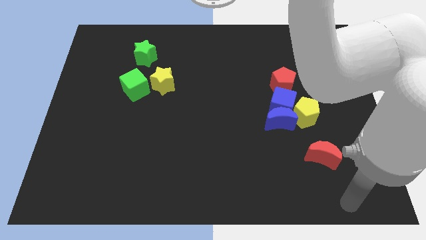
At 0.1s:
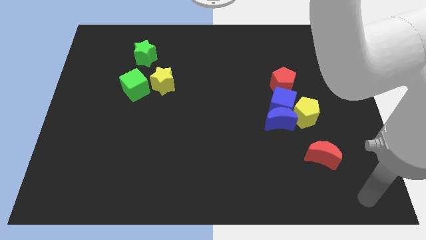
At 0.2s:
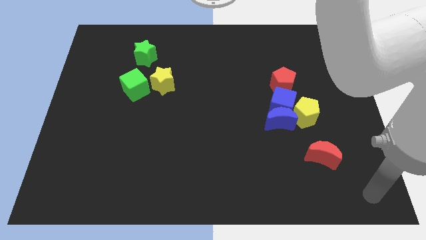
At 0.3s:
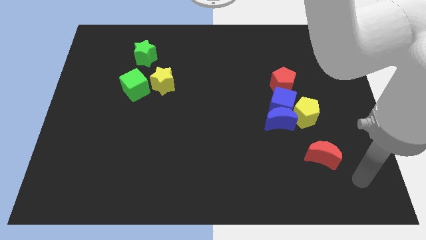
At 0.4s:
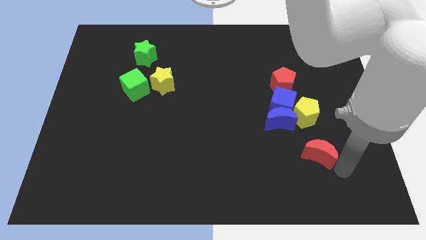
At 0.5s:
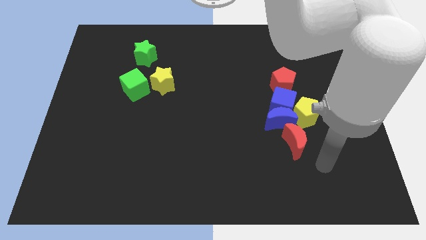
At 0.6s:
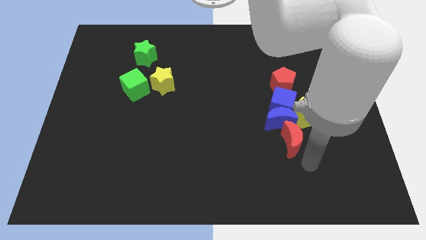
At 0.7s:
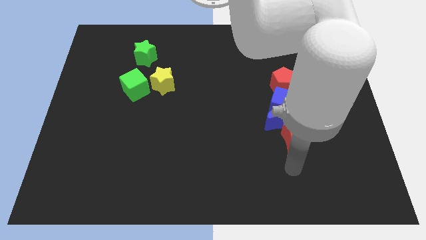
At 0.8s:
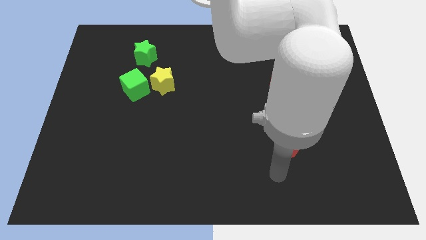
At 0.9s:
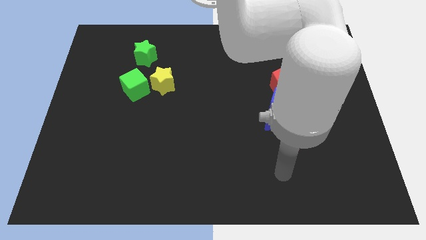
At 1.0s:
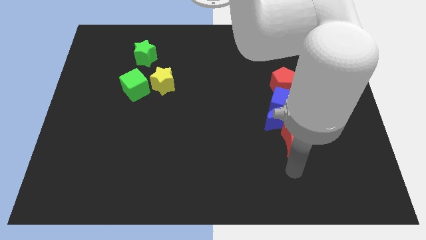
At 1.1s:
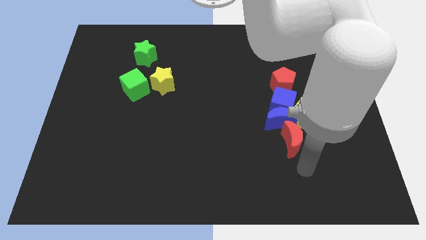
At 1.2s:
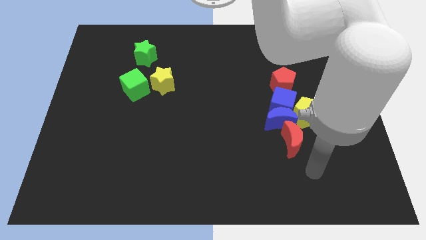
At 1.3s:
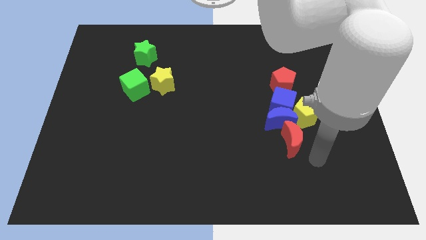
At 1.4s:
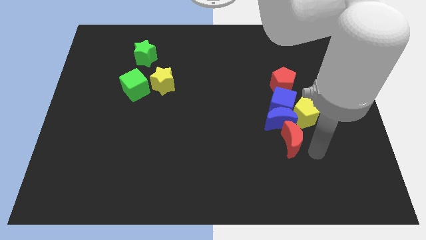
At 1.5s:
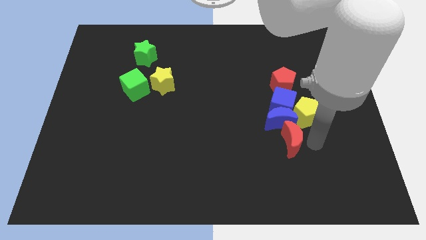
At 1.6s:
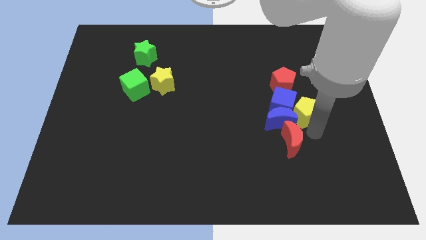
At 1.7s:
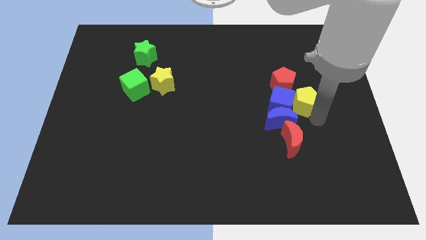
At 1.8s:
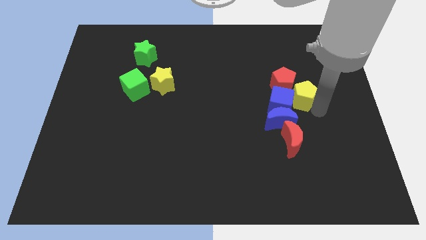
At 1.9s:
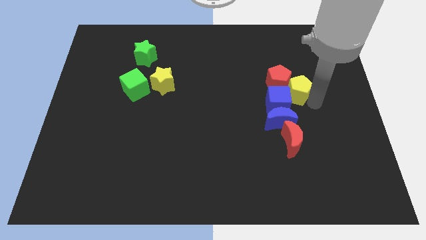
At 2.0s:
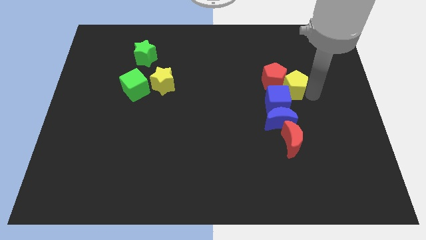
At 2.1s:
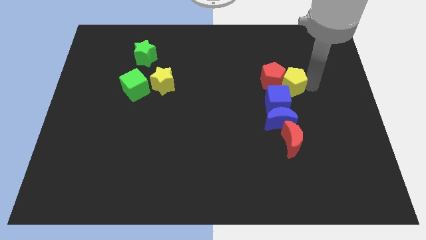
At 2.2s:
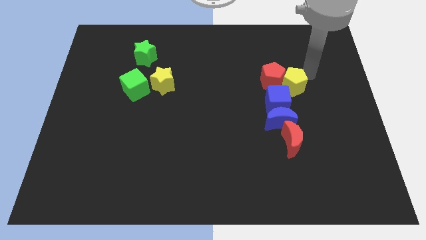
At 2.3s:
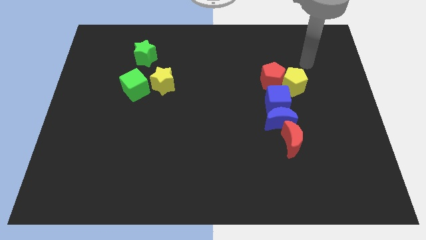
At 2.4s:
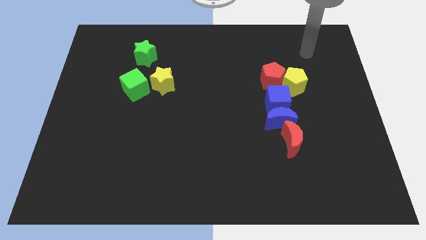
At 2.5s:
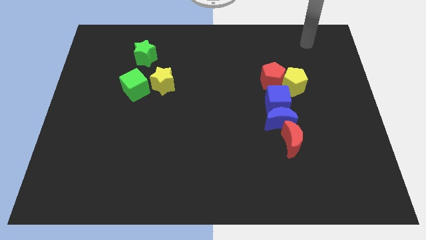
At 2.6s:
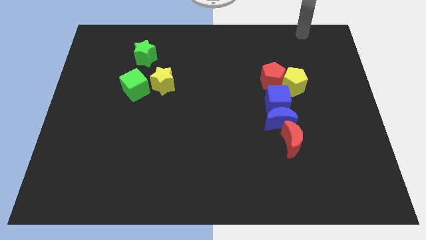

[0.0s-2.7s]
place red crescent below blue crescent

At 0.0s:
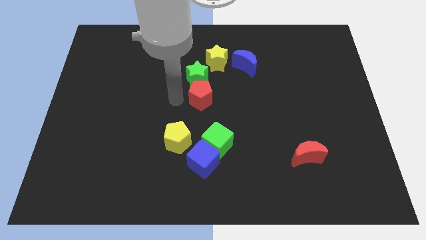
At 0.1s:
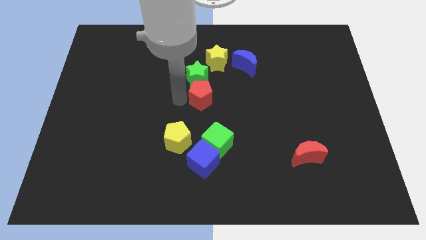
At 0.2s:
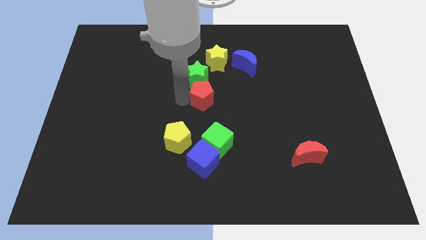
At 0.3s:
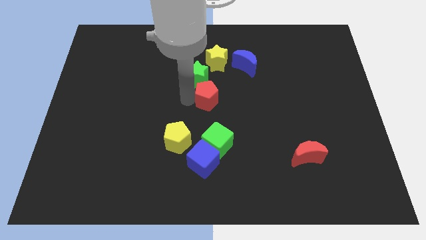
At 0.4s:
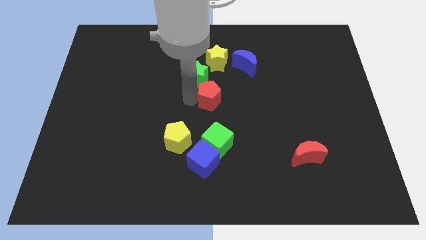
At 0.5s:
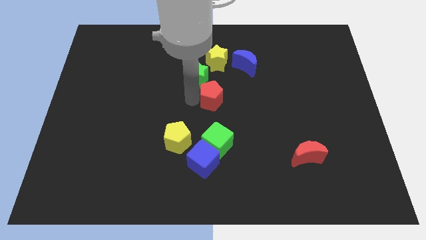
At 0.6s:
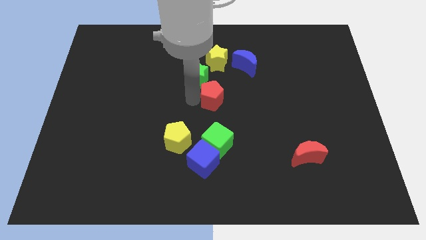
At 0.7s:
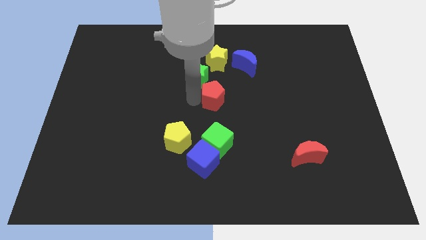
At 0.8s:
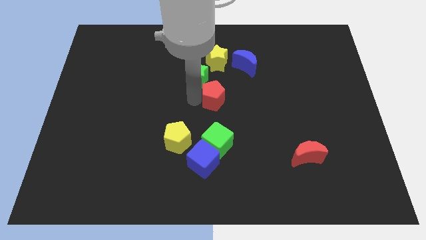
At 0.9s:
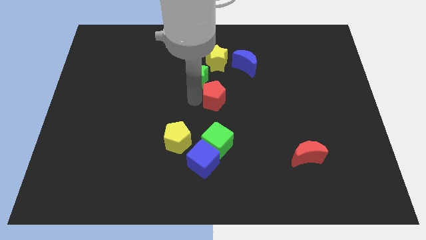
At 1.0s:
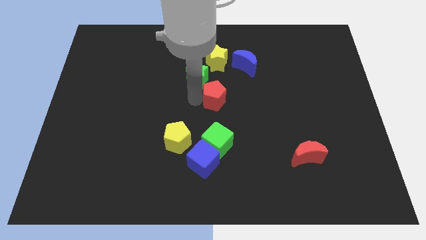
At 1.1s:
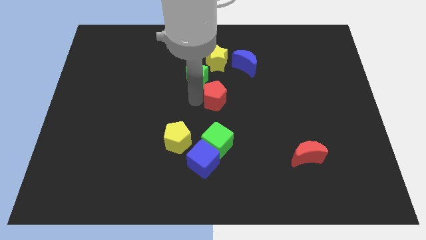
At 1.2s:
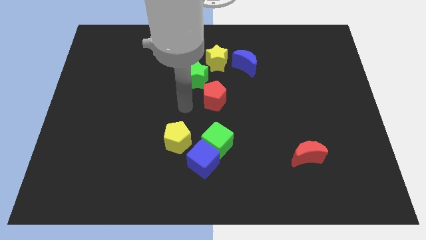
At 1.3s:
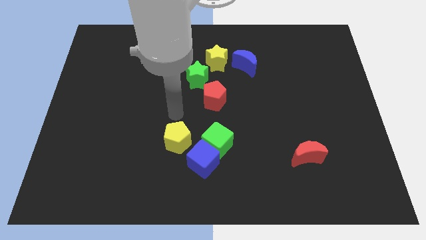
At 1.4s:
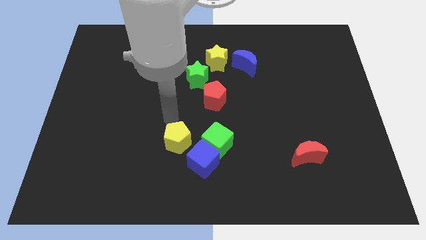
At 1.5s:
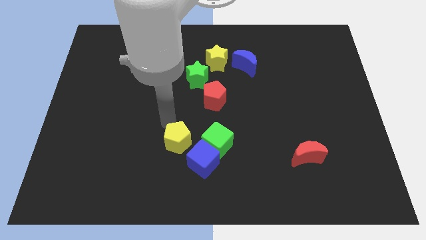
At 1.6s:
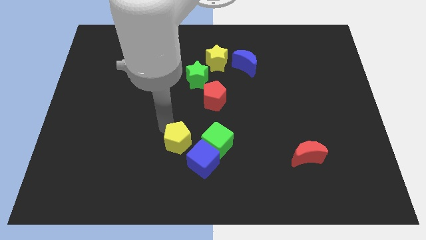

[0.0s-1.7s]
push red pentagon towards right

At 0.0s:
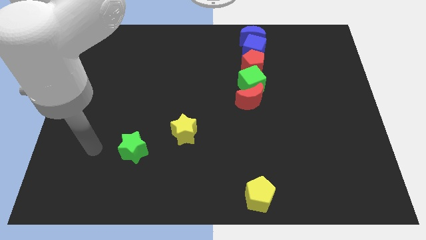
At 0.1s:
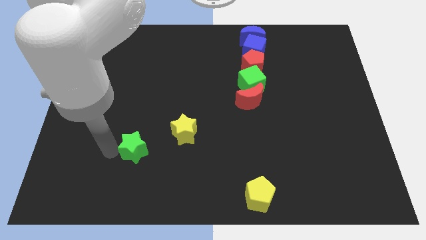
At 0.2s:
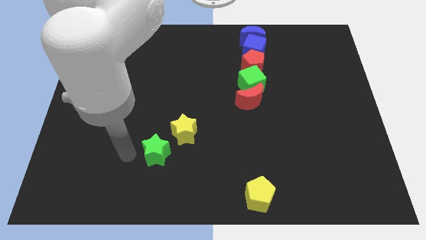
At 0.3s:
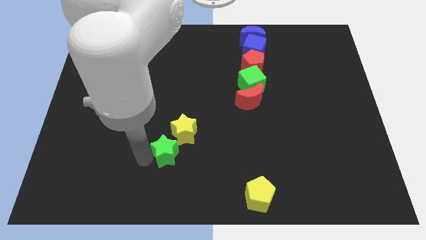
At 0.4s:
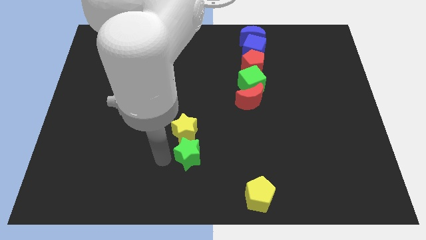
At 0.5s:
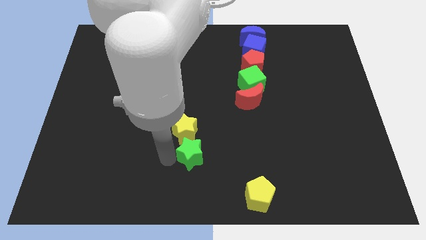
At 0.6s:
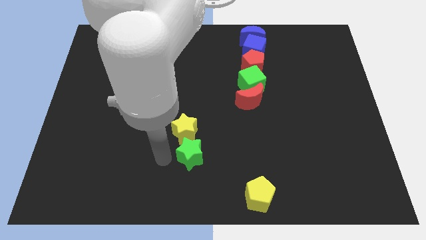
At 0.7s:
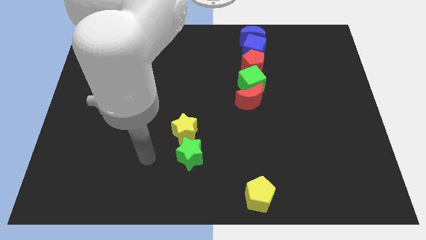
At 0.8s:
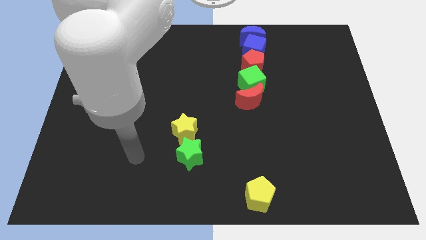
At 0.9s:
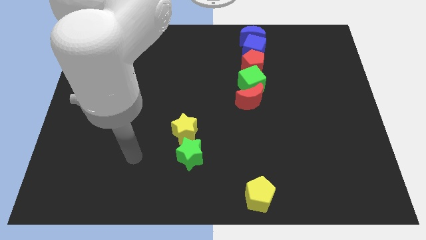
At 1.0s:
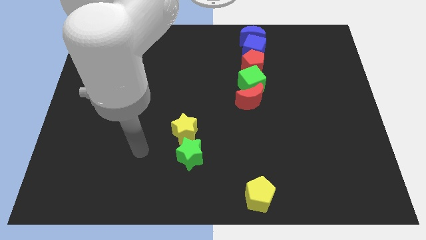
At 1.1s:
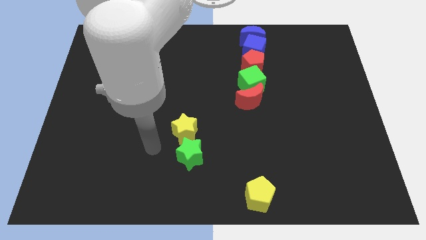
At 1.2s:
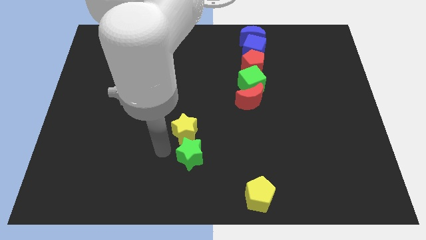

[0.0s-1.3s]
put the green star below the yellow star

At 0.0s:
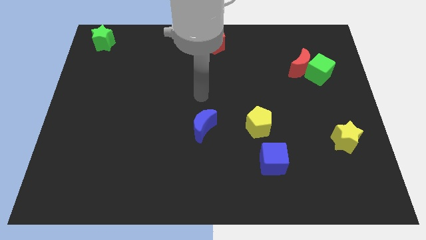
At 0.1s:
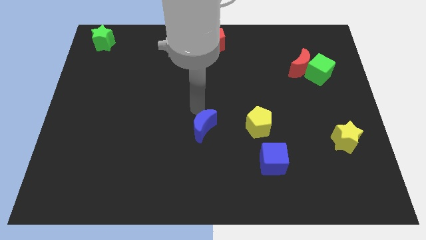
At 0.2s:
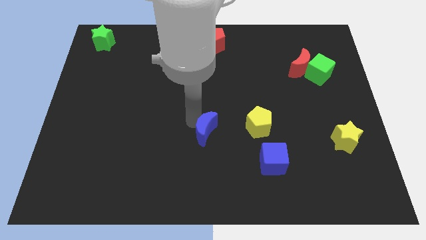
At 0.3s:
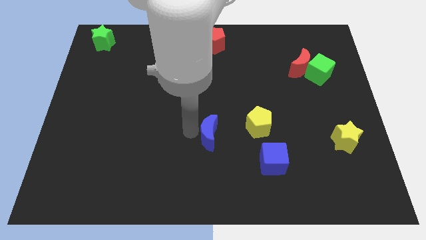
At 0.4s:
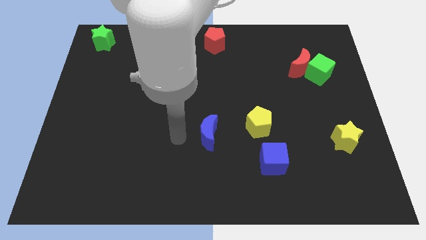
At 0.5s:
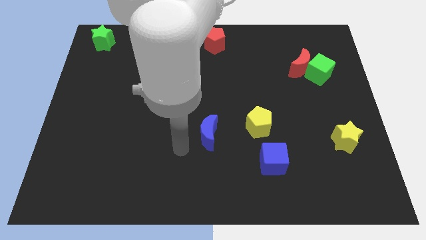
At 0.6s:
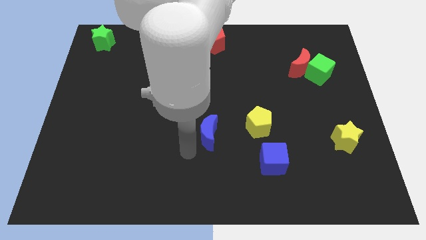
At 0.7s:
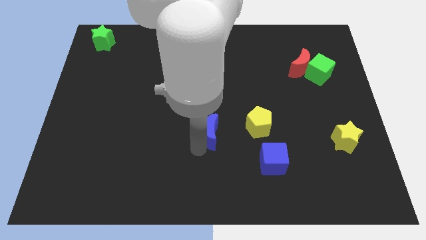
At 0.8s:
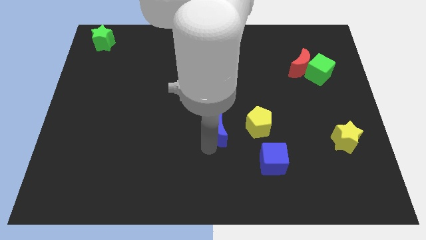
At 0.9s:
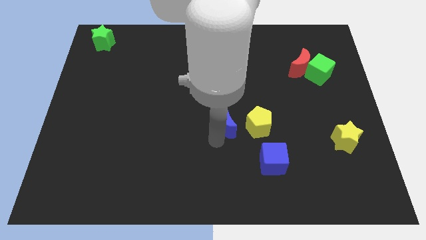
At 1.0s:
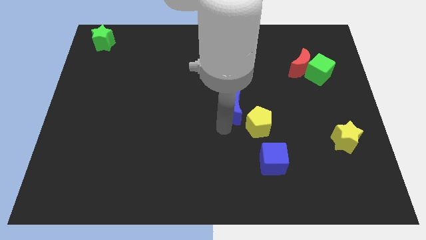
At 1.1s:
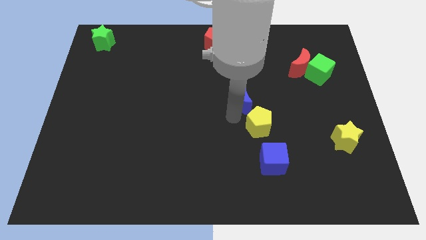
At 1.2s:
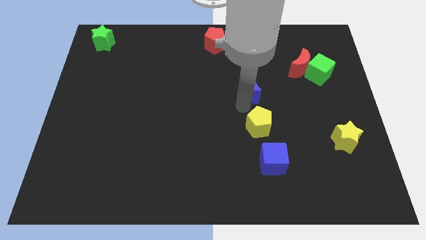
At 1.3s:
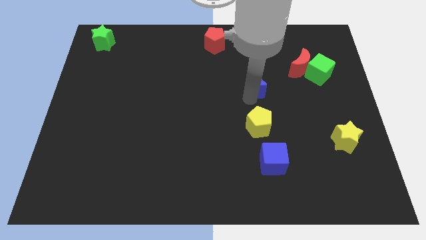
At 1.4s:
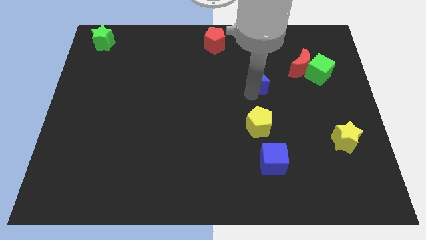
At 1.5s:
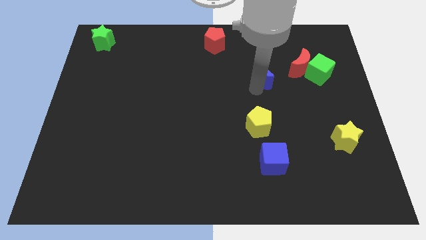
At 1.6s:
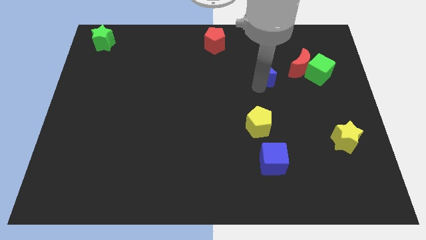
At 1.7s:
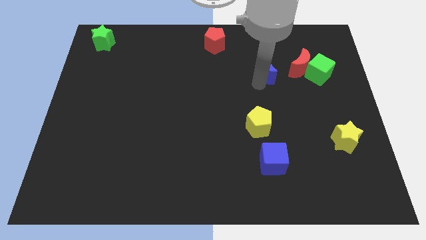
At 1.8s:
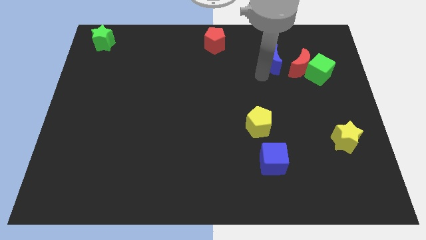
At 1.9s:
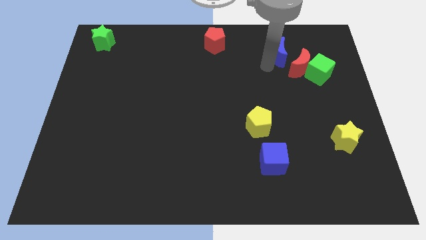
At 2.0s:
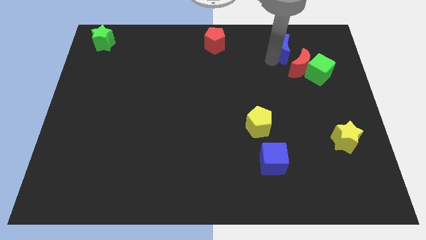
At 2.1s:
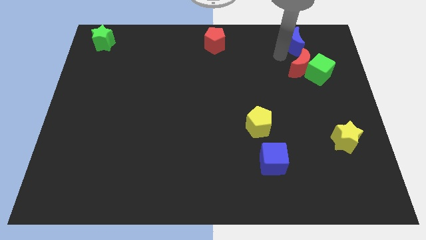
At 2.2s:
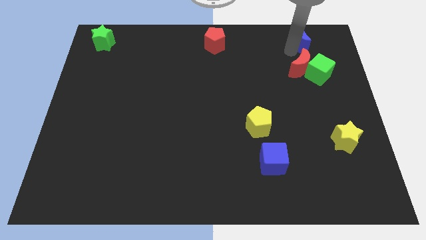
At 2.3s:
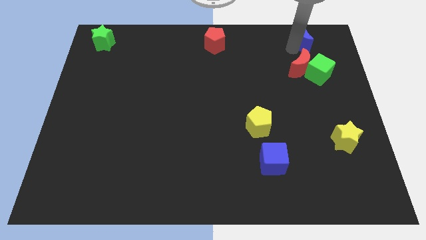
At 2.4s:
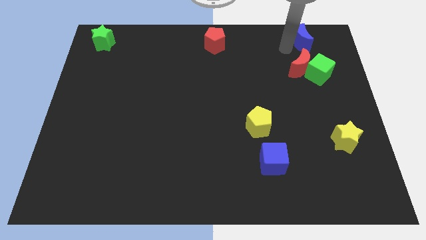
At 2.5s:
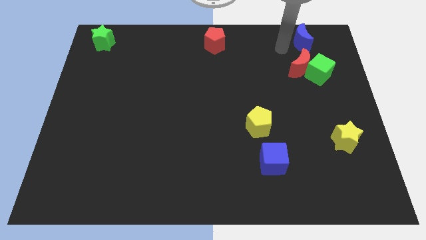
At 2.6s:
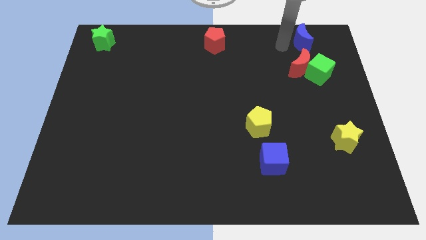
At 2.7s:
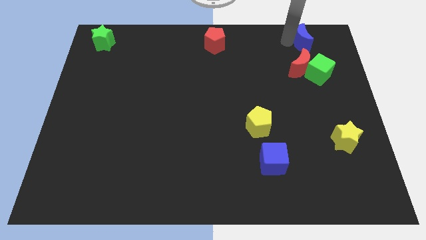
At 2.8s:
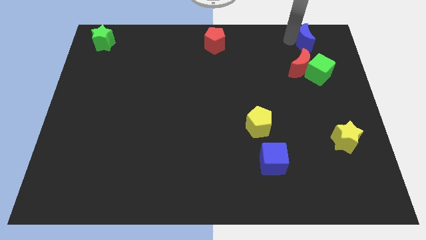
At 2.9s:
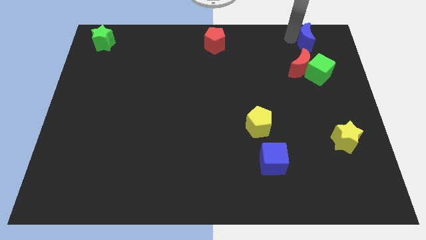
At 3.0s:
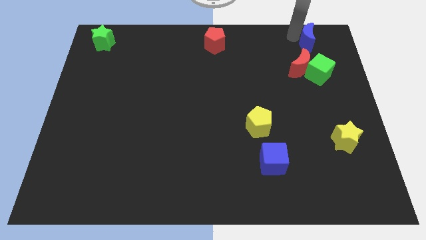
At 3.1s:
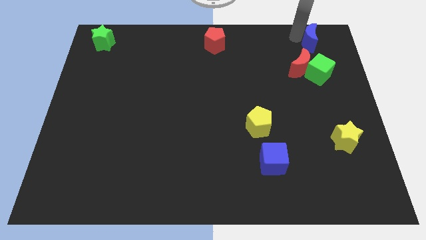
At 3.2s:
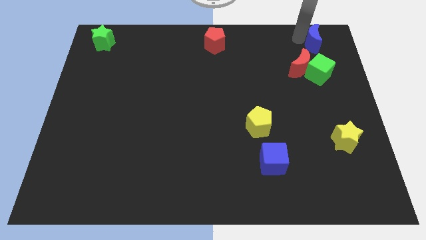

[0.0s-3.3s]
place the blue moon above the red moon
